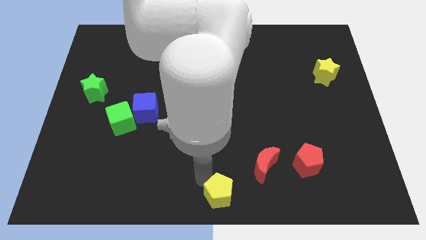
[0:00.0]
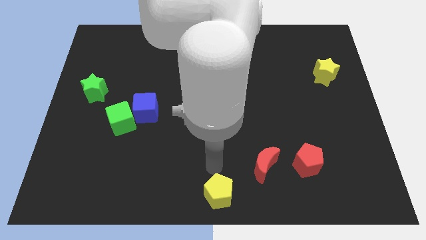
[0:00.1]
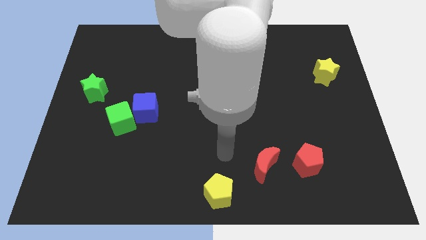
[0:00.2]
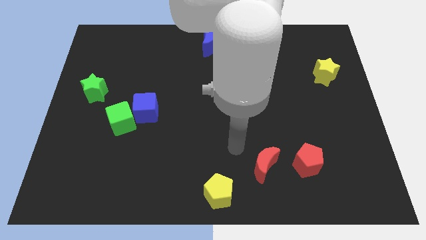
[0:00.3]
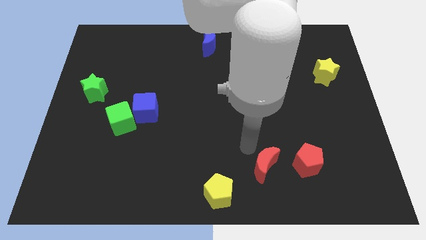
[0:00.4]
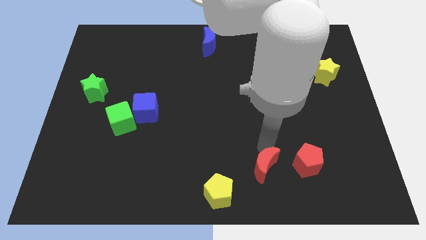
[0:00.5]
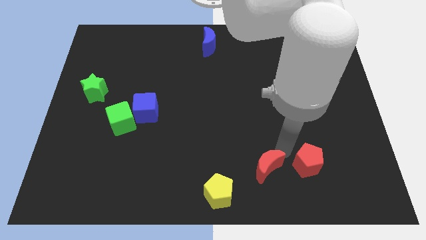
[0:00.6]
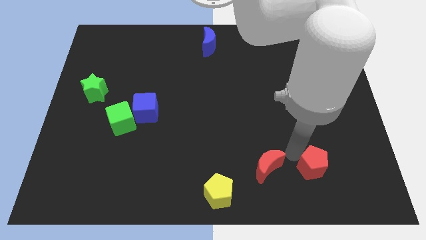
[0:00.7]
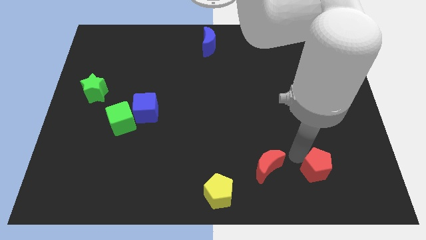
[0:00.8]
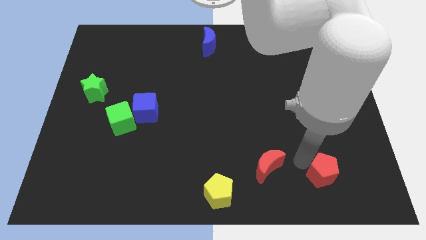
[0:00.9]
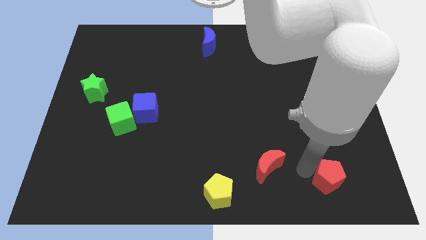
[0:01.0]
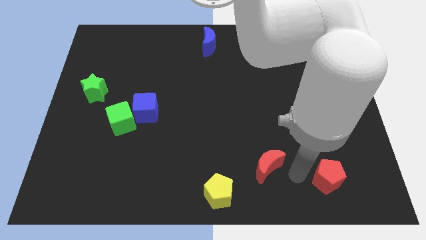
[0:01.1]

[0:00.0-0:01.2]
move your arm away from the yellow pentagon

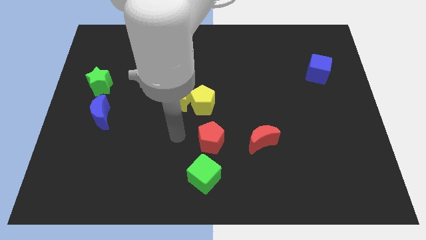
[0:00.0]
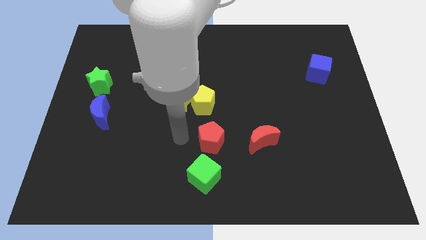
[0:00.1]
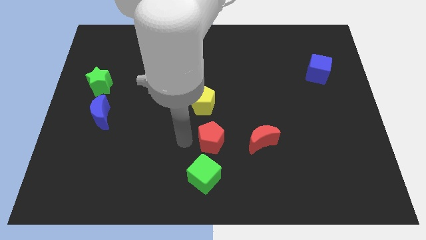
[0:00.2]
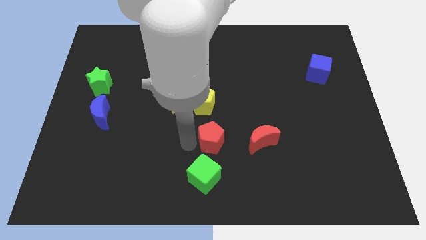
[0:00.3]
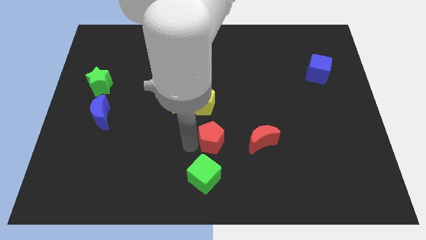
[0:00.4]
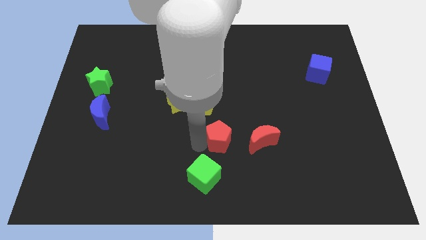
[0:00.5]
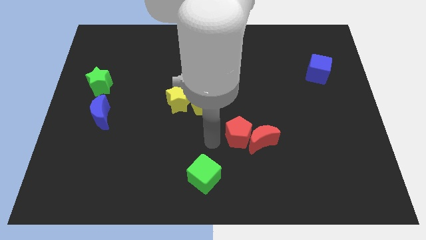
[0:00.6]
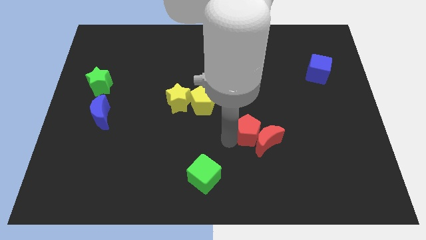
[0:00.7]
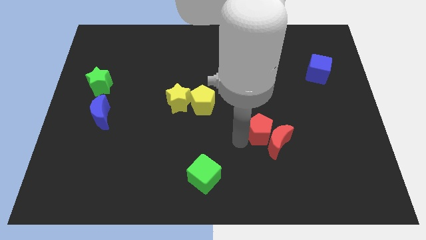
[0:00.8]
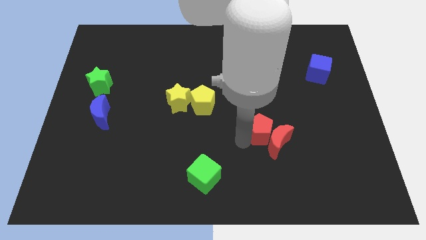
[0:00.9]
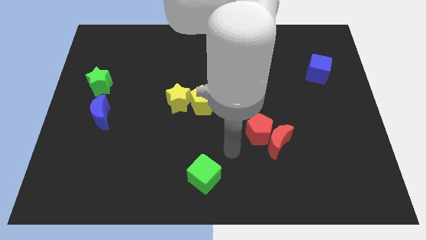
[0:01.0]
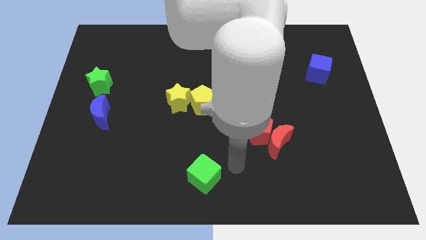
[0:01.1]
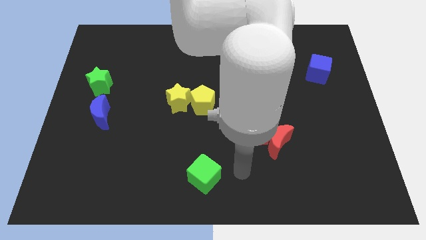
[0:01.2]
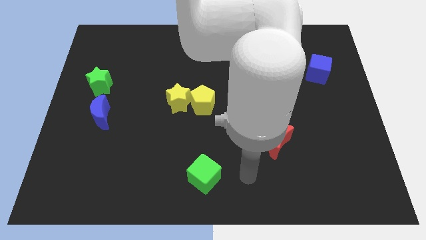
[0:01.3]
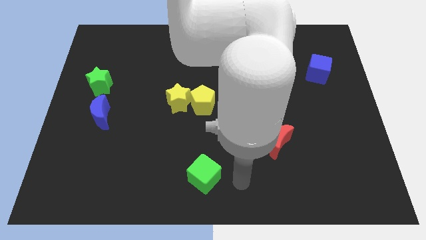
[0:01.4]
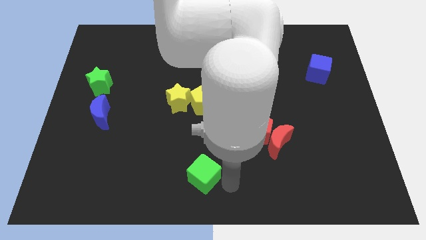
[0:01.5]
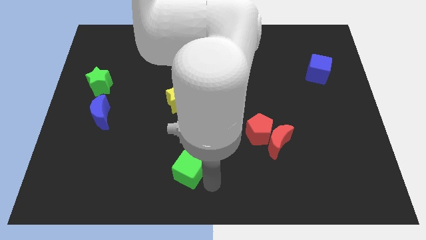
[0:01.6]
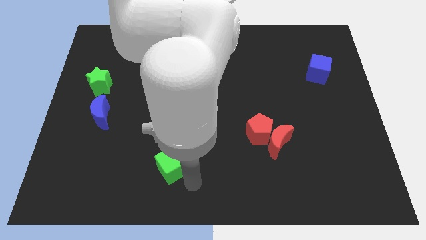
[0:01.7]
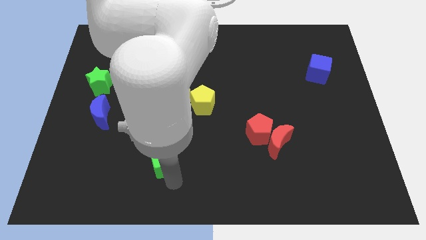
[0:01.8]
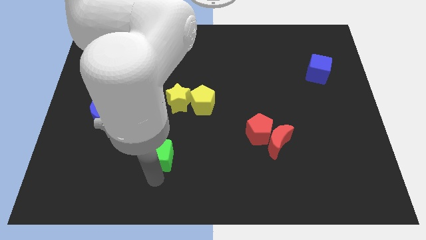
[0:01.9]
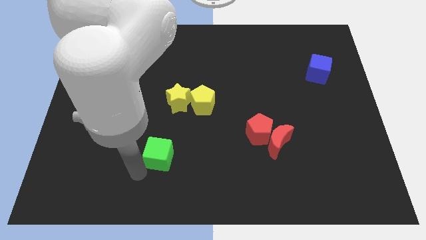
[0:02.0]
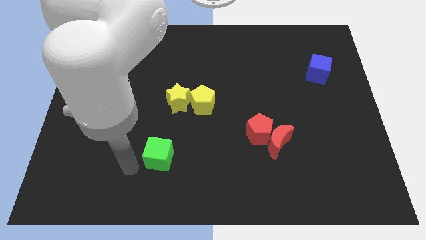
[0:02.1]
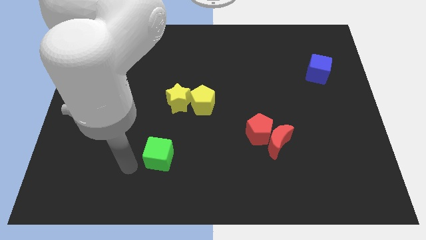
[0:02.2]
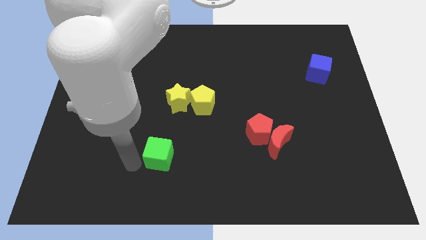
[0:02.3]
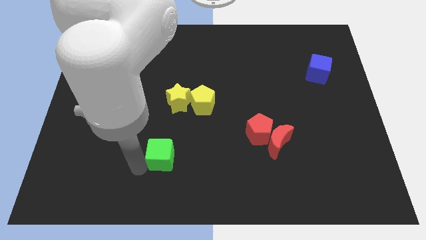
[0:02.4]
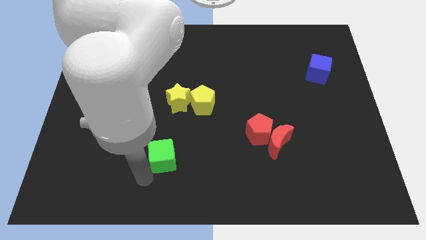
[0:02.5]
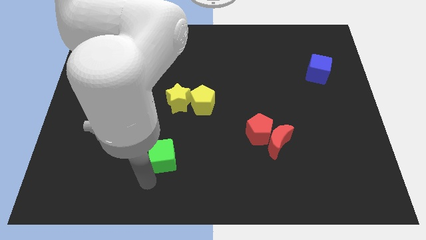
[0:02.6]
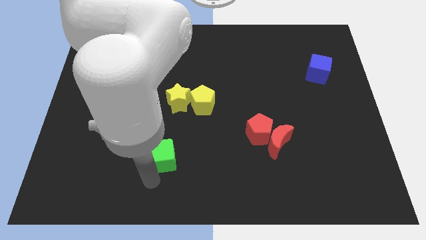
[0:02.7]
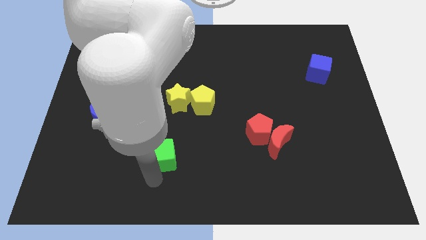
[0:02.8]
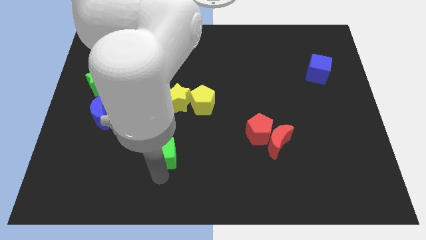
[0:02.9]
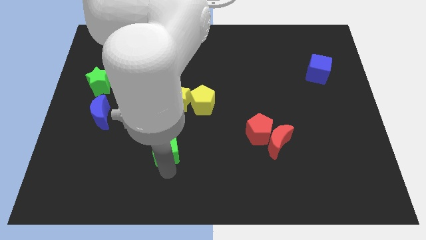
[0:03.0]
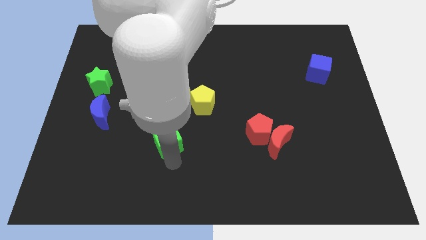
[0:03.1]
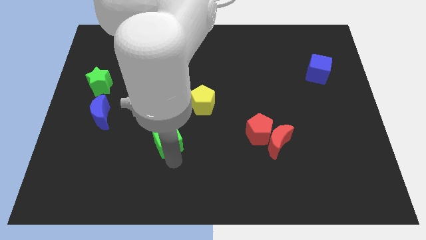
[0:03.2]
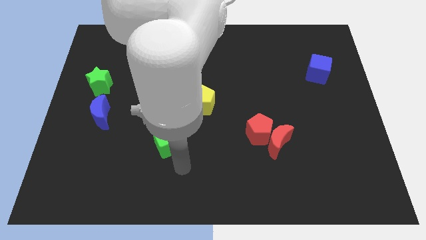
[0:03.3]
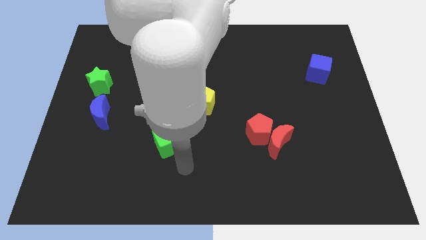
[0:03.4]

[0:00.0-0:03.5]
separate red blocks and green star from each other

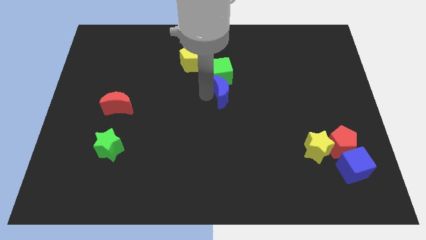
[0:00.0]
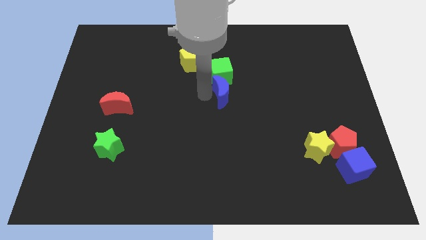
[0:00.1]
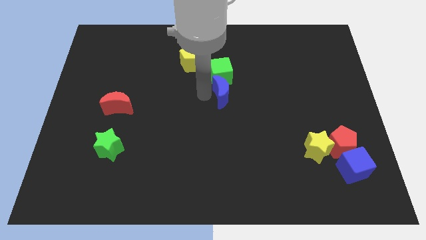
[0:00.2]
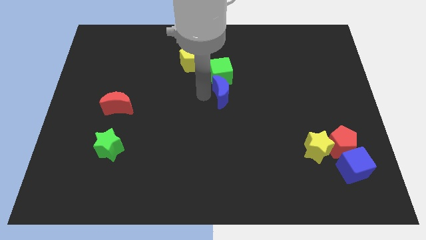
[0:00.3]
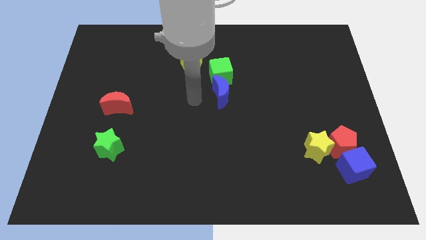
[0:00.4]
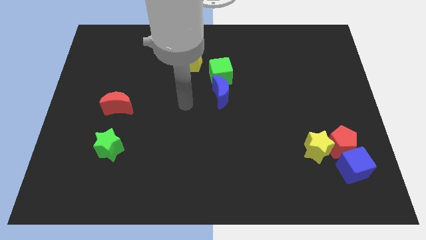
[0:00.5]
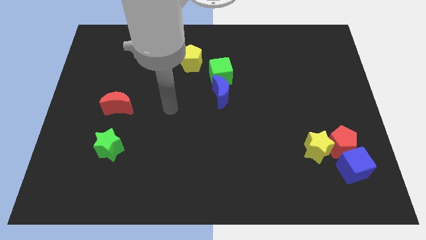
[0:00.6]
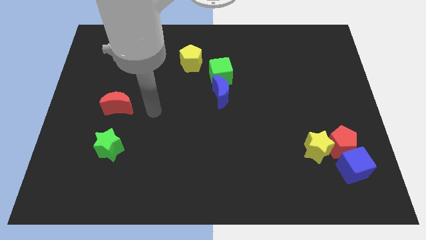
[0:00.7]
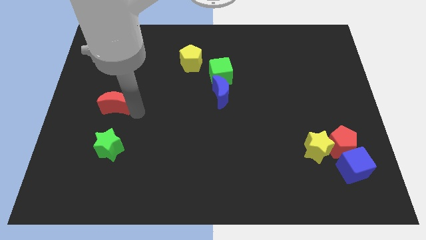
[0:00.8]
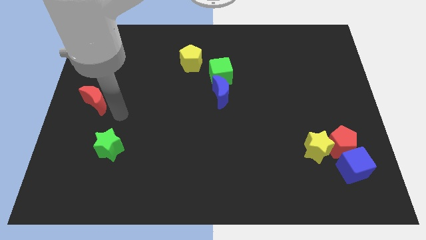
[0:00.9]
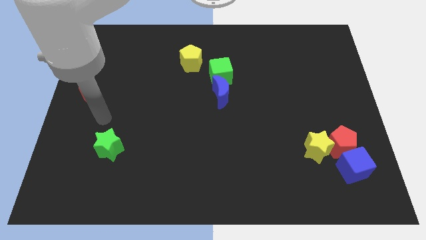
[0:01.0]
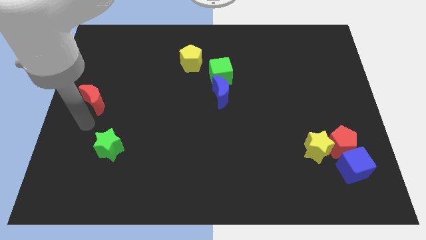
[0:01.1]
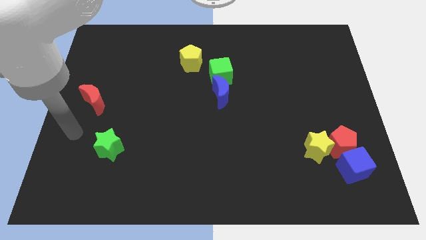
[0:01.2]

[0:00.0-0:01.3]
slightly move red crescent towards left center

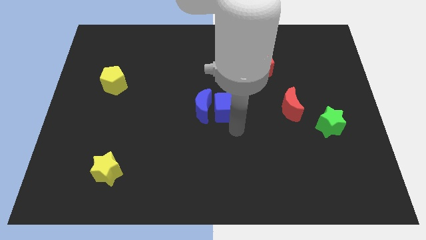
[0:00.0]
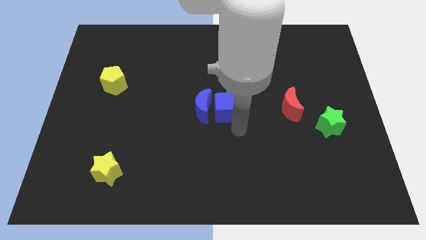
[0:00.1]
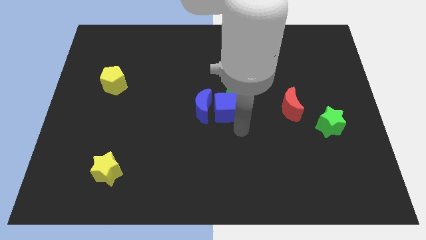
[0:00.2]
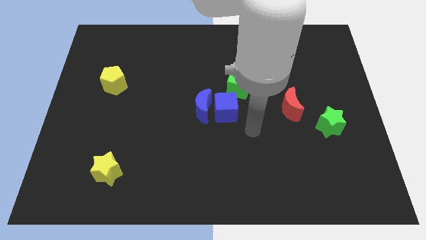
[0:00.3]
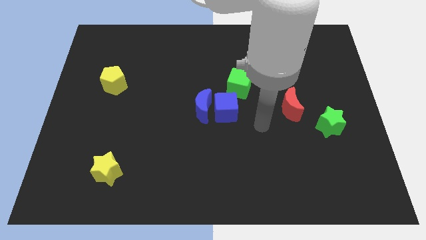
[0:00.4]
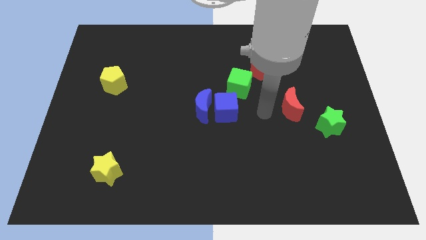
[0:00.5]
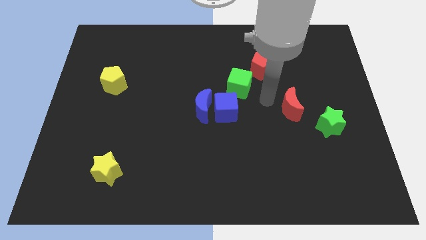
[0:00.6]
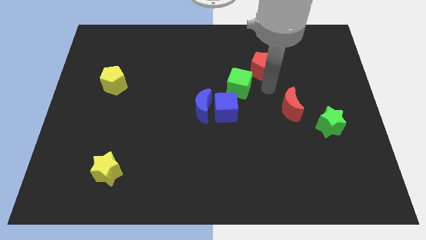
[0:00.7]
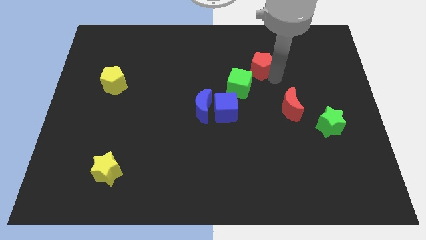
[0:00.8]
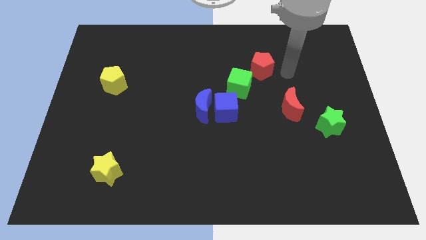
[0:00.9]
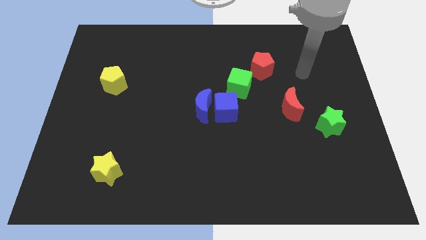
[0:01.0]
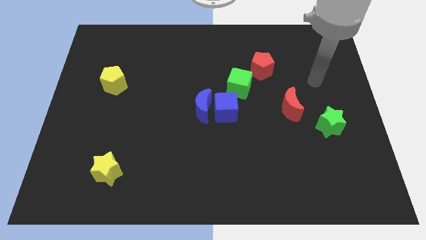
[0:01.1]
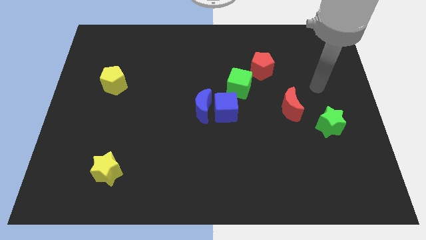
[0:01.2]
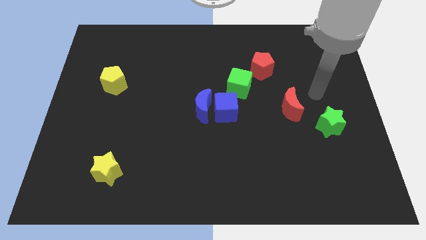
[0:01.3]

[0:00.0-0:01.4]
move your arm away from the blue cube

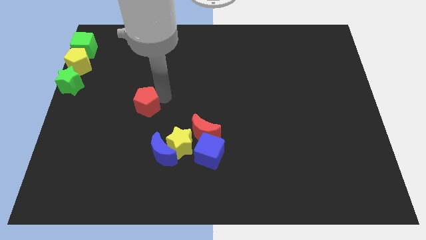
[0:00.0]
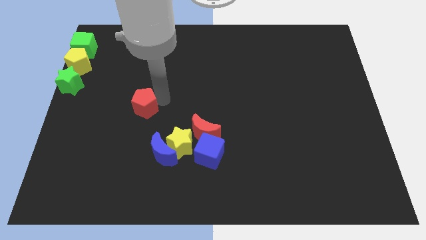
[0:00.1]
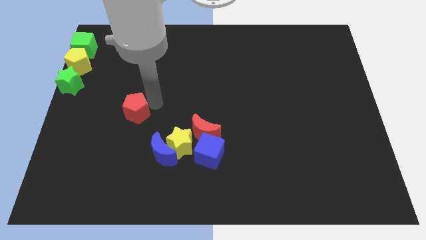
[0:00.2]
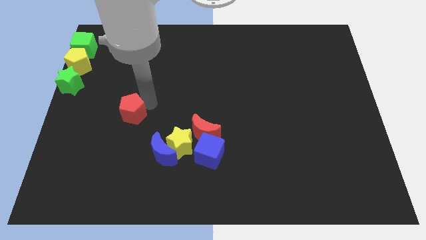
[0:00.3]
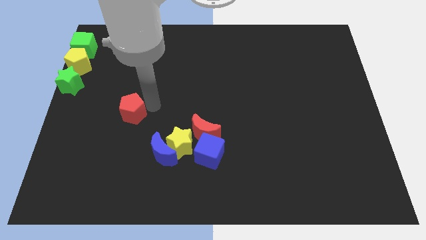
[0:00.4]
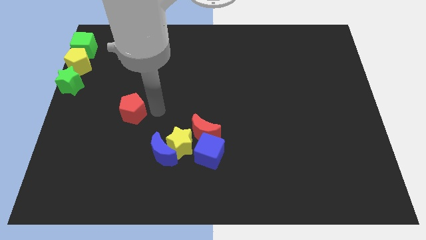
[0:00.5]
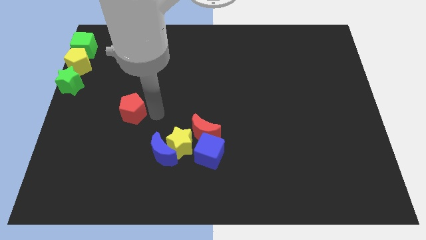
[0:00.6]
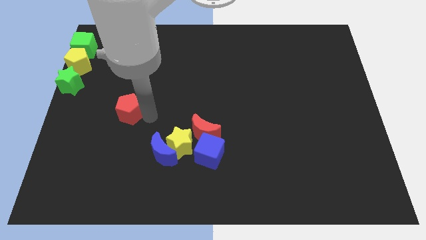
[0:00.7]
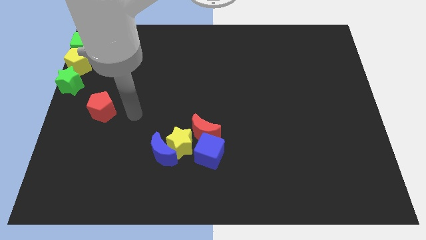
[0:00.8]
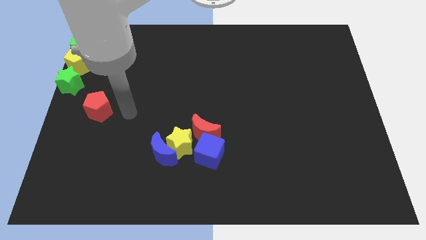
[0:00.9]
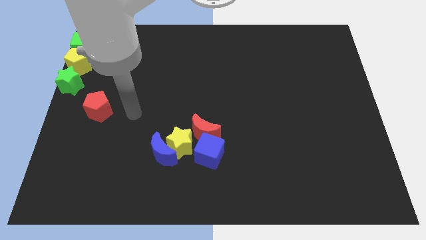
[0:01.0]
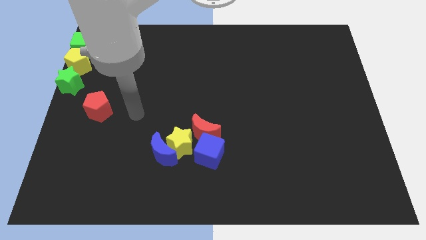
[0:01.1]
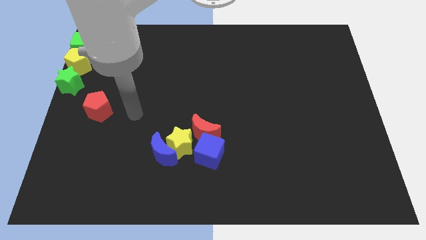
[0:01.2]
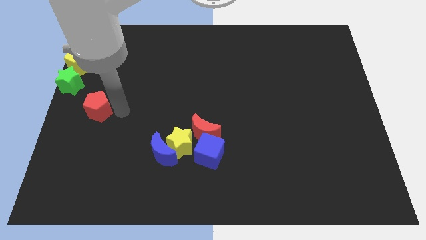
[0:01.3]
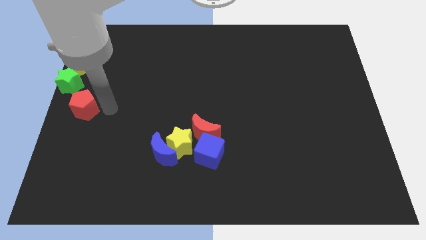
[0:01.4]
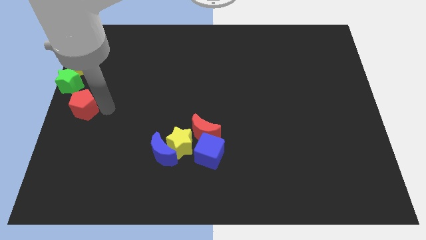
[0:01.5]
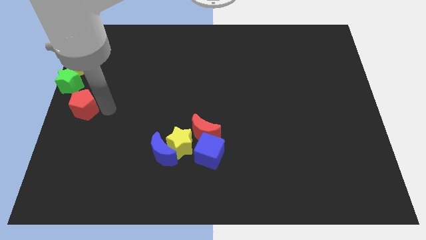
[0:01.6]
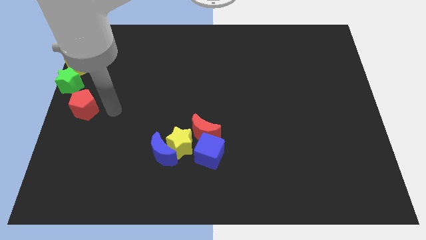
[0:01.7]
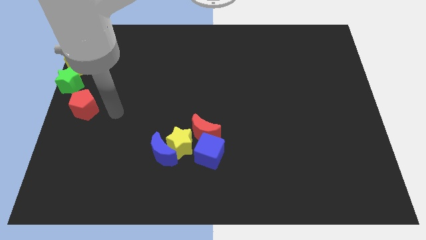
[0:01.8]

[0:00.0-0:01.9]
slide the red pentagon towards the green star
